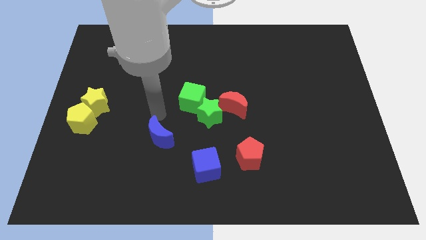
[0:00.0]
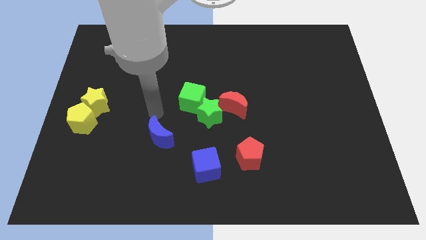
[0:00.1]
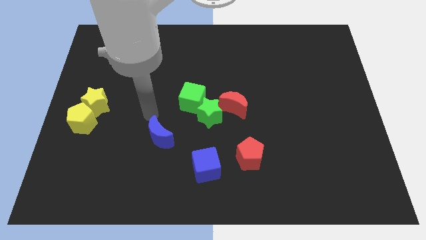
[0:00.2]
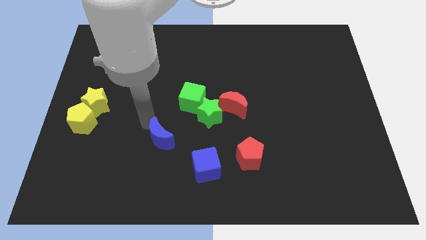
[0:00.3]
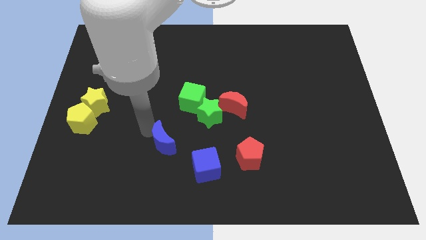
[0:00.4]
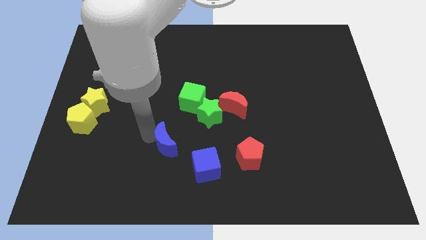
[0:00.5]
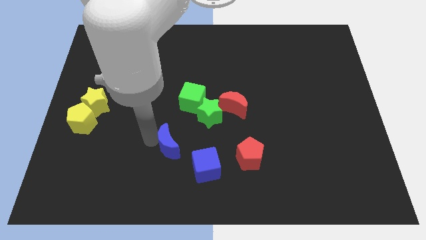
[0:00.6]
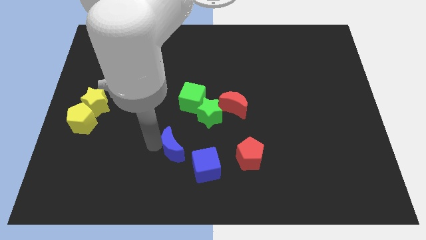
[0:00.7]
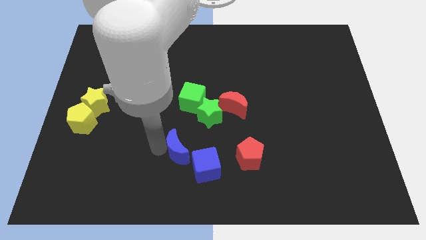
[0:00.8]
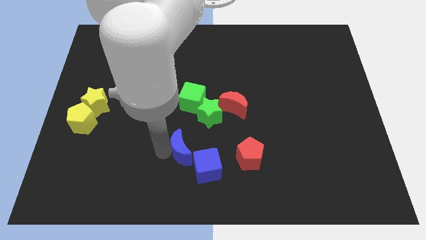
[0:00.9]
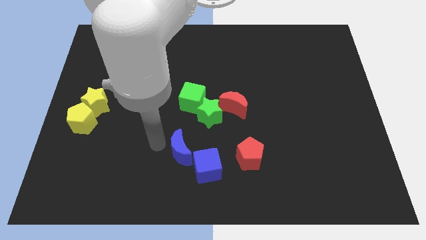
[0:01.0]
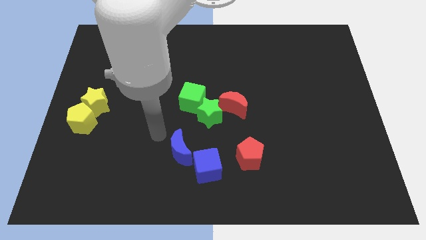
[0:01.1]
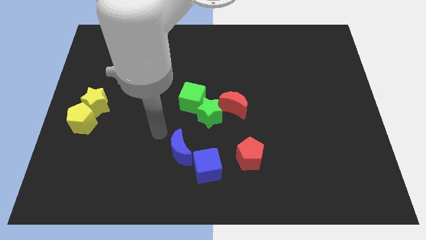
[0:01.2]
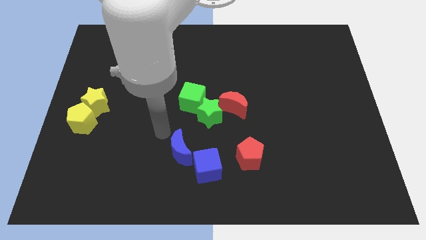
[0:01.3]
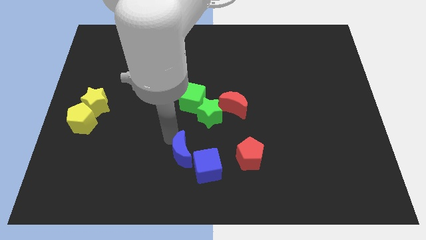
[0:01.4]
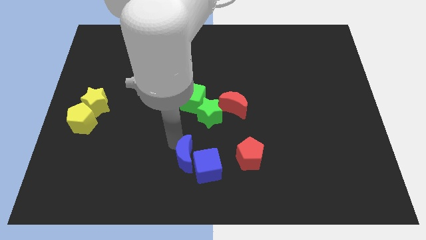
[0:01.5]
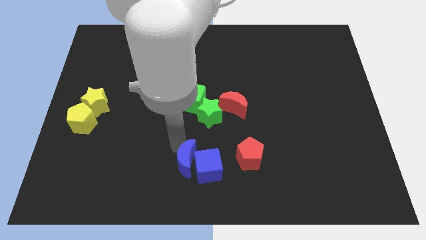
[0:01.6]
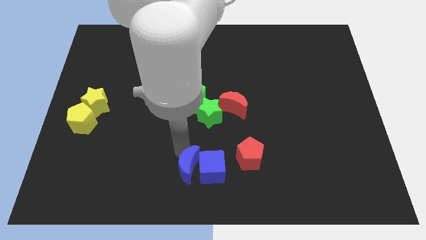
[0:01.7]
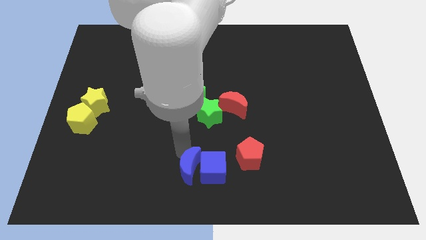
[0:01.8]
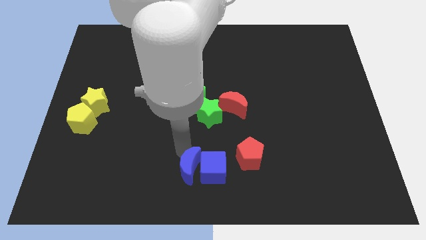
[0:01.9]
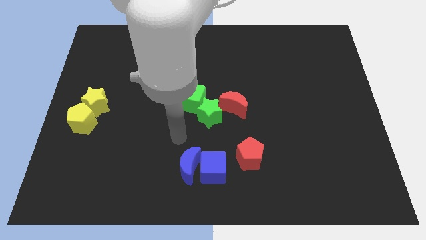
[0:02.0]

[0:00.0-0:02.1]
place blue moon to the left of blue cube

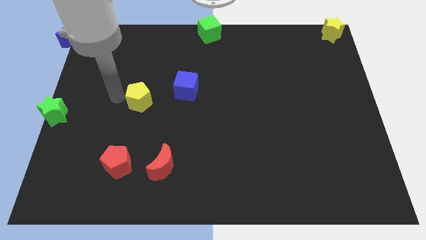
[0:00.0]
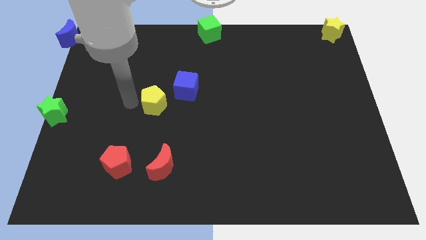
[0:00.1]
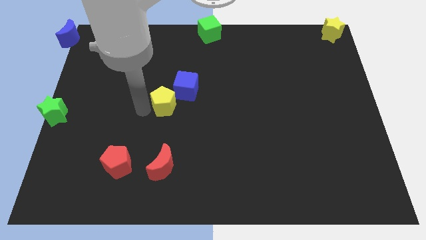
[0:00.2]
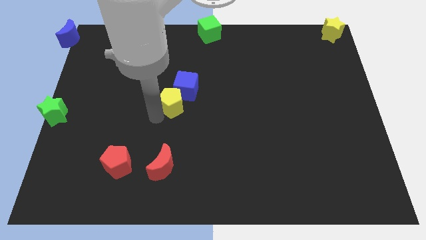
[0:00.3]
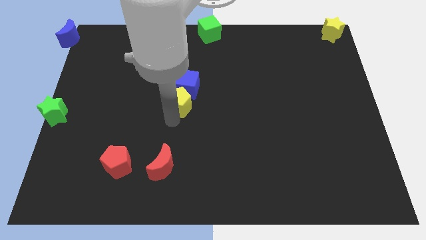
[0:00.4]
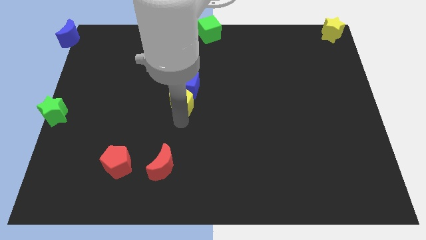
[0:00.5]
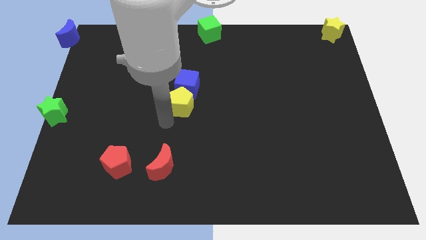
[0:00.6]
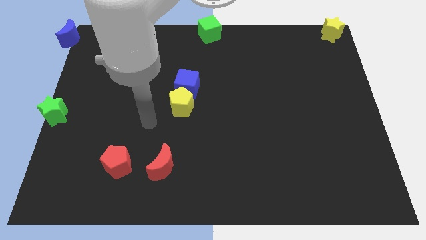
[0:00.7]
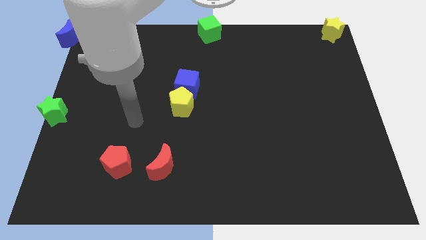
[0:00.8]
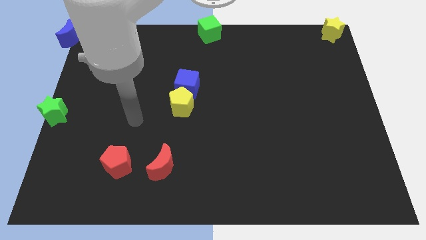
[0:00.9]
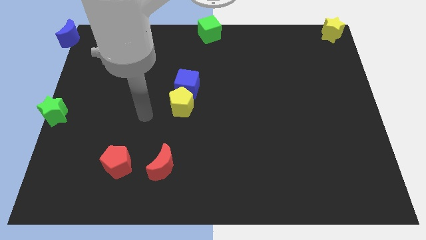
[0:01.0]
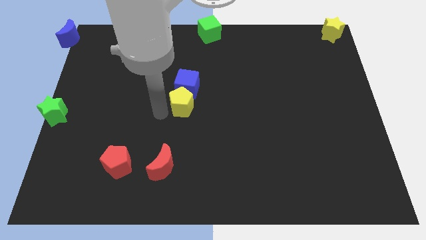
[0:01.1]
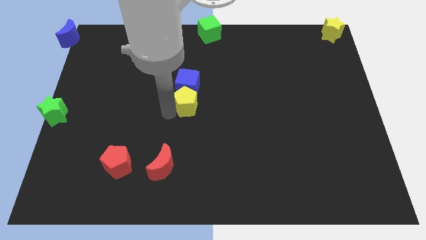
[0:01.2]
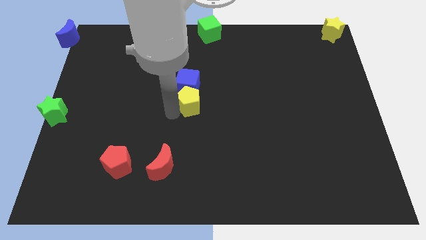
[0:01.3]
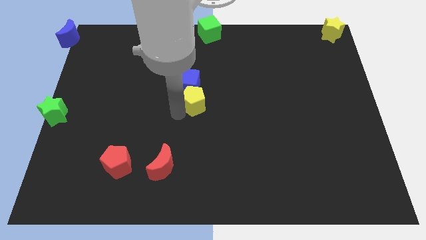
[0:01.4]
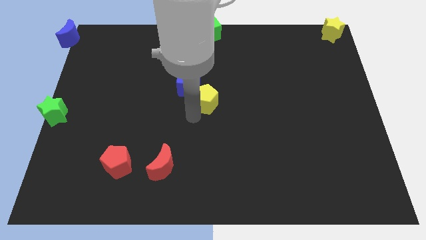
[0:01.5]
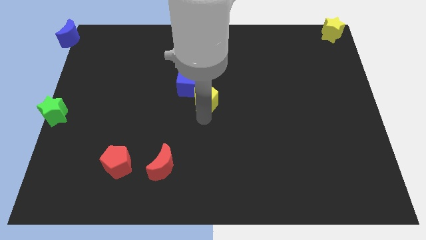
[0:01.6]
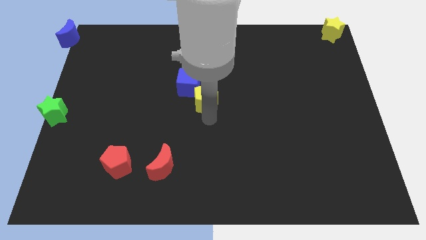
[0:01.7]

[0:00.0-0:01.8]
move the yellow pentagon to the middle of the board

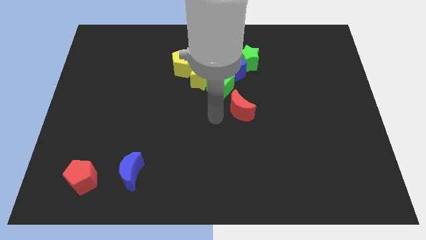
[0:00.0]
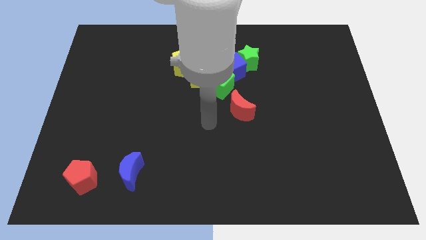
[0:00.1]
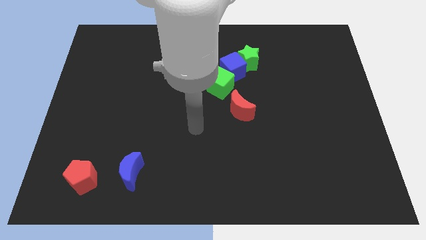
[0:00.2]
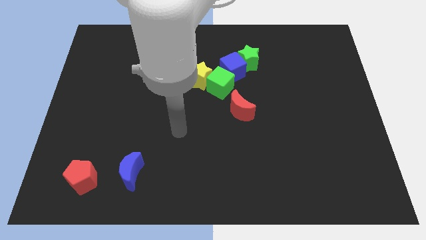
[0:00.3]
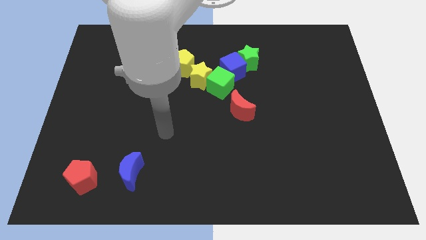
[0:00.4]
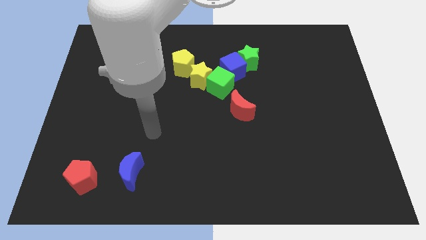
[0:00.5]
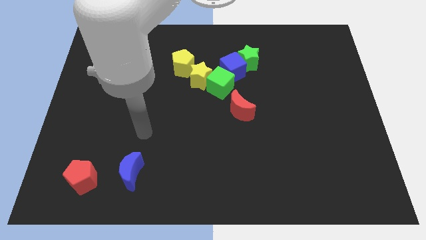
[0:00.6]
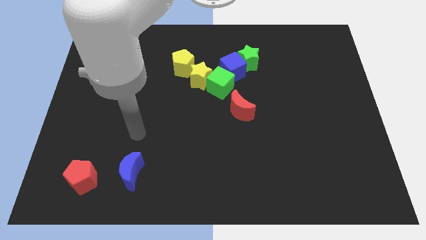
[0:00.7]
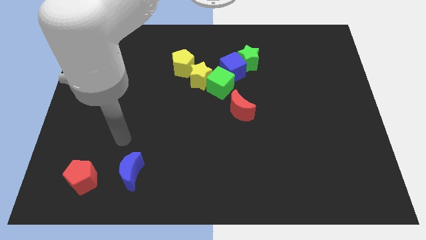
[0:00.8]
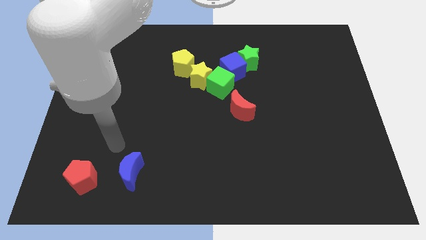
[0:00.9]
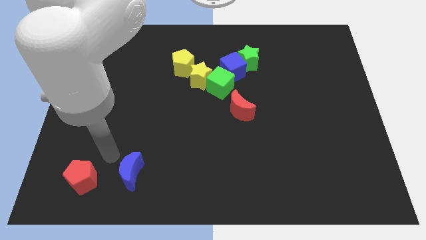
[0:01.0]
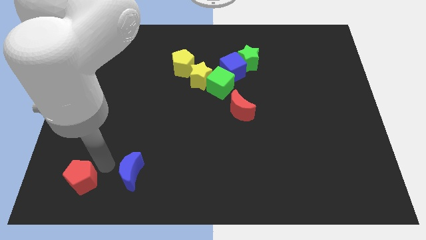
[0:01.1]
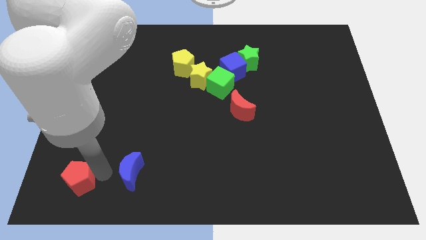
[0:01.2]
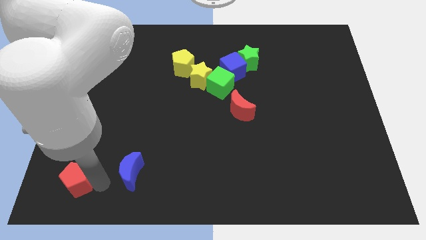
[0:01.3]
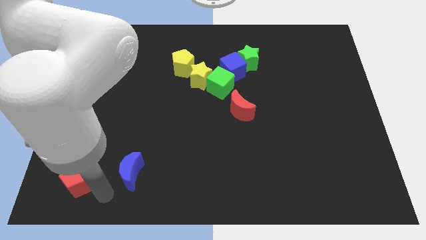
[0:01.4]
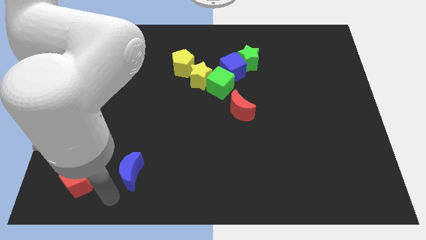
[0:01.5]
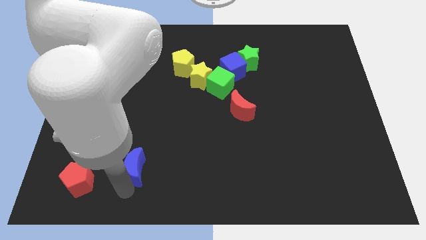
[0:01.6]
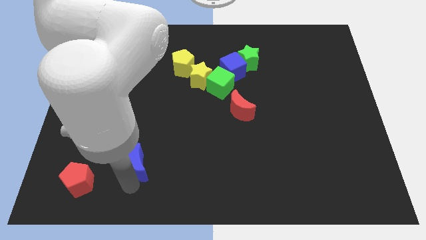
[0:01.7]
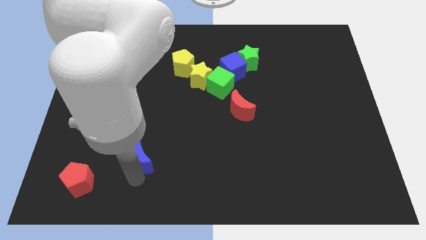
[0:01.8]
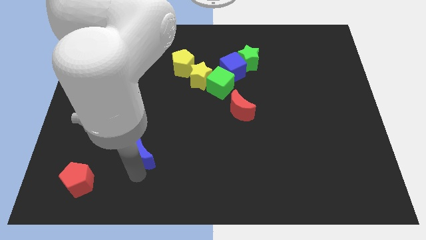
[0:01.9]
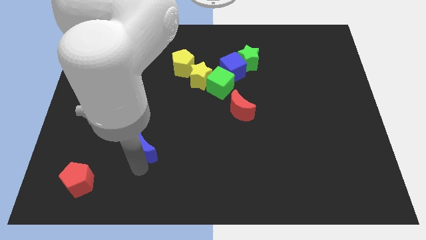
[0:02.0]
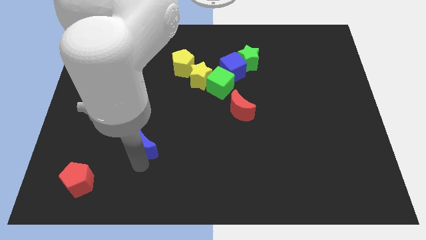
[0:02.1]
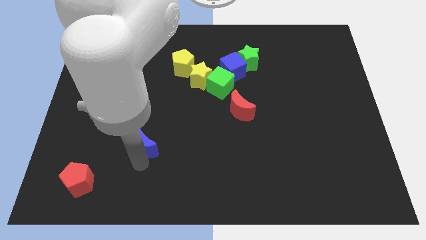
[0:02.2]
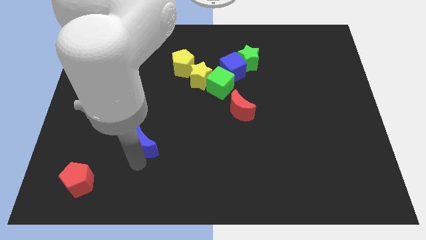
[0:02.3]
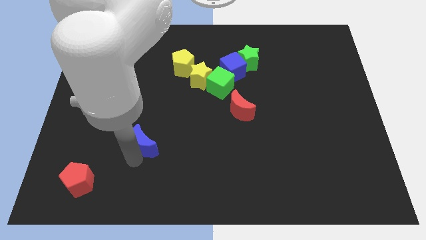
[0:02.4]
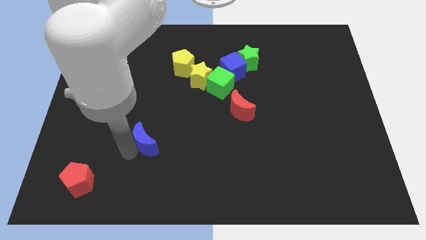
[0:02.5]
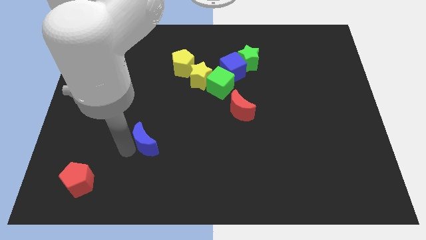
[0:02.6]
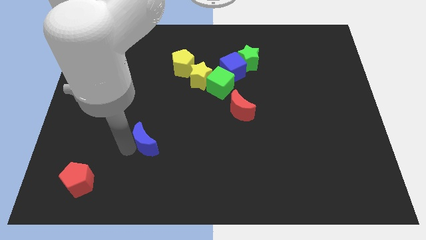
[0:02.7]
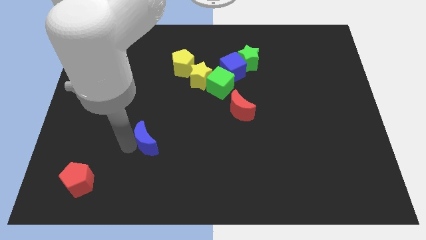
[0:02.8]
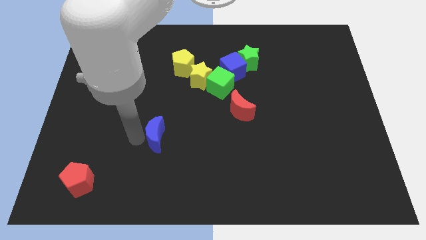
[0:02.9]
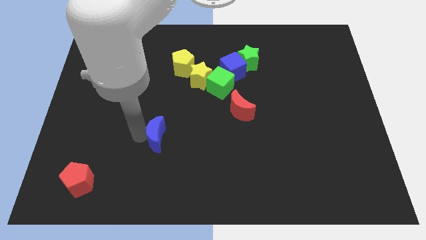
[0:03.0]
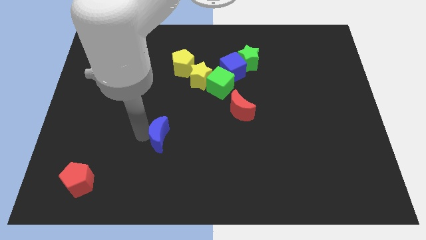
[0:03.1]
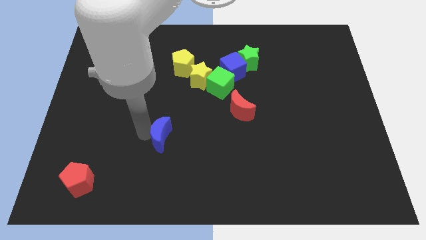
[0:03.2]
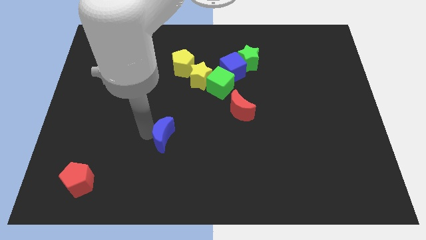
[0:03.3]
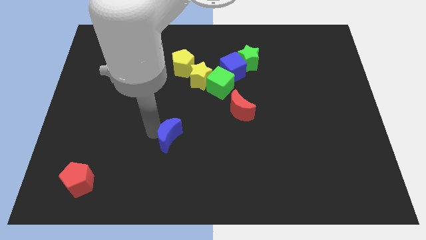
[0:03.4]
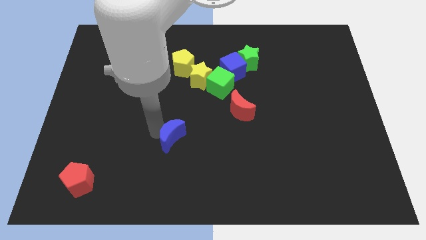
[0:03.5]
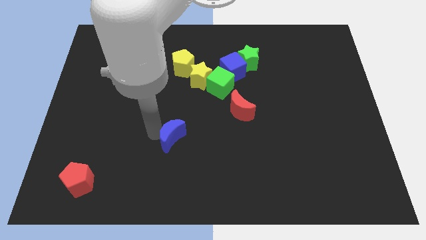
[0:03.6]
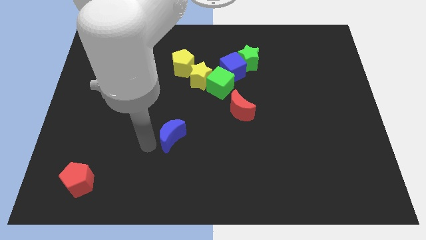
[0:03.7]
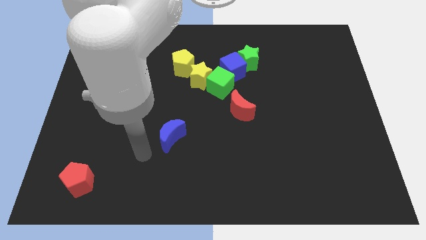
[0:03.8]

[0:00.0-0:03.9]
move the blue crescent slightly to the center of the board

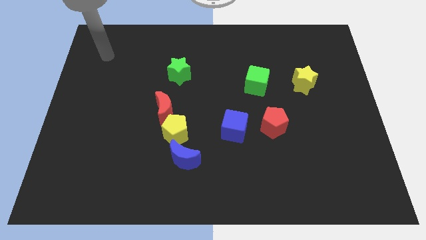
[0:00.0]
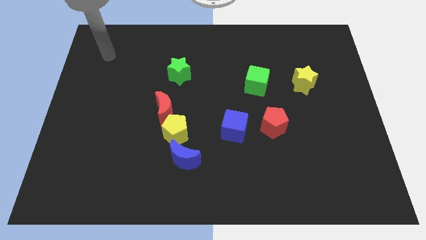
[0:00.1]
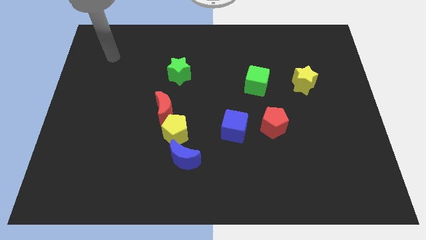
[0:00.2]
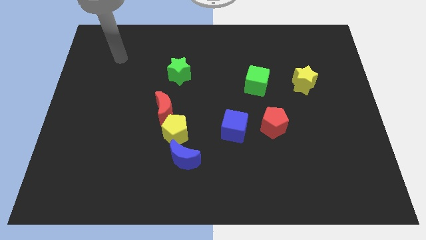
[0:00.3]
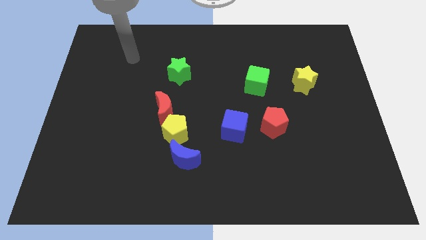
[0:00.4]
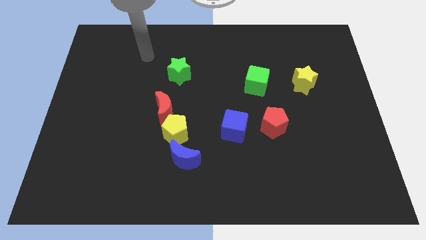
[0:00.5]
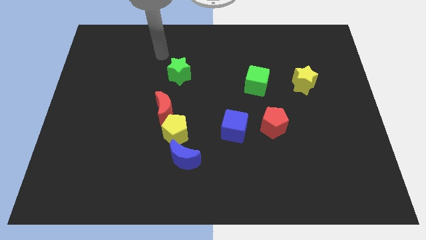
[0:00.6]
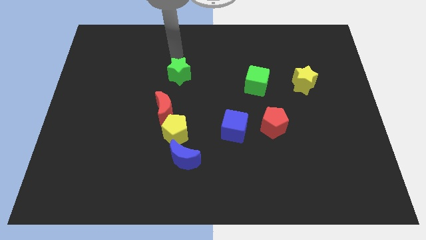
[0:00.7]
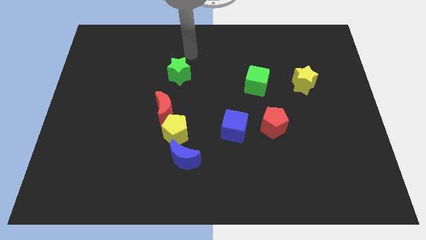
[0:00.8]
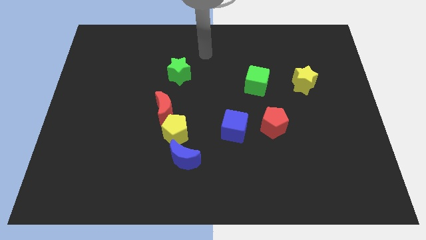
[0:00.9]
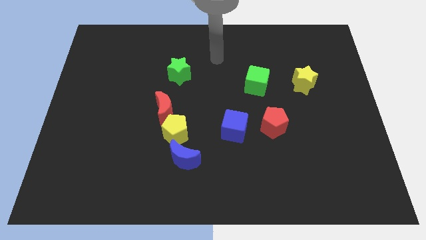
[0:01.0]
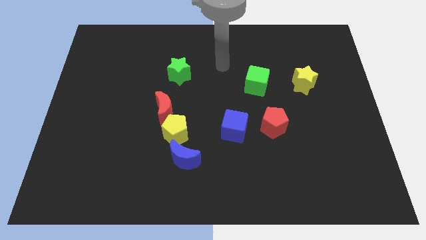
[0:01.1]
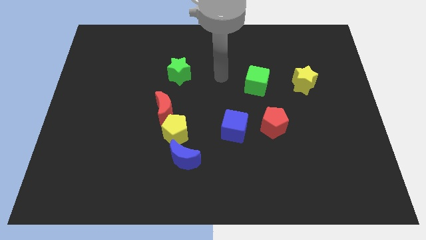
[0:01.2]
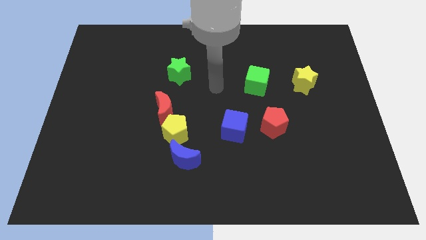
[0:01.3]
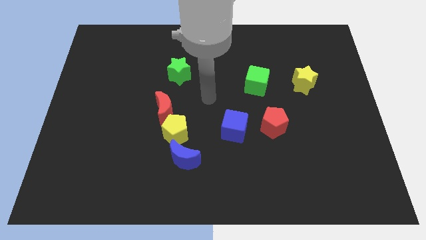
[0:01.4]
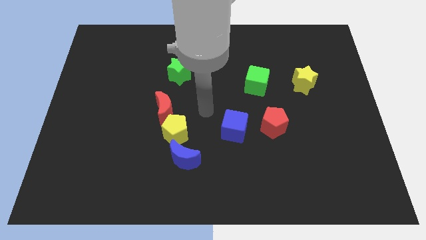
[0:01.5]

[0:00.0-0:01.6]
move your arm at the center of the board
